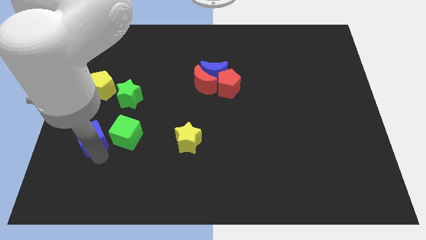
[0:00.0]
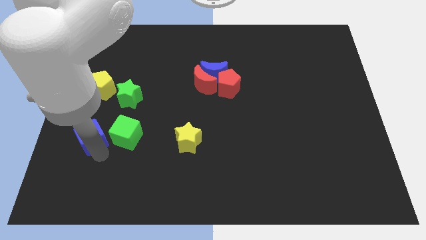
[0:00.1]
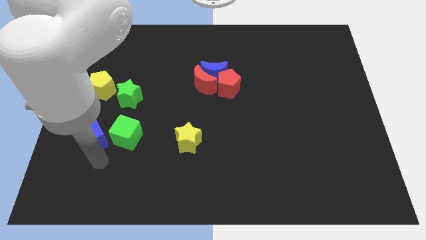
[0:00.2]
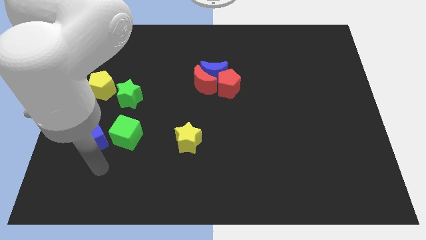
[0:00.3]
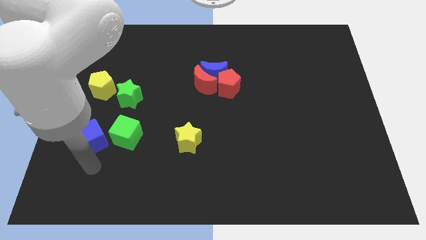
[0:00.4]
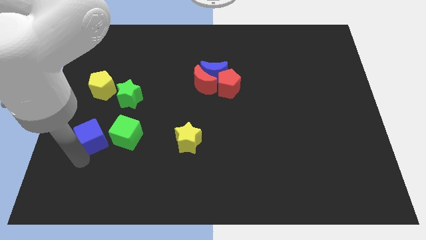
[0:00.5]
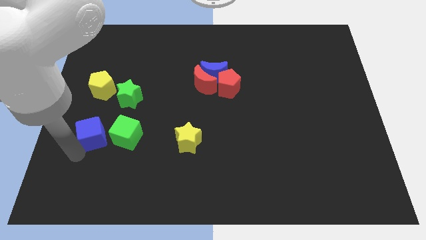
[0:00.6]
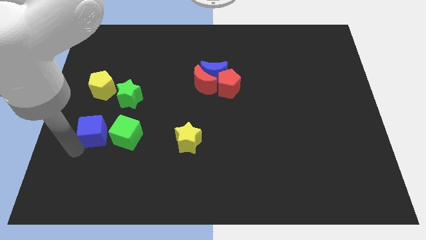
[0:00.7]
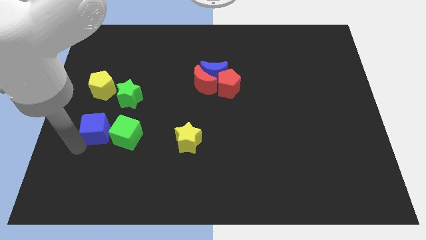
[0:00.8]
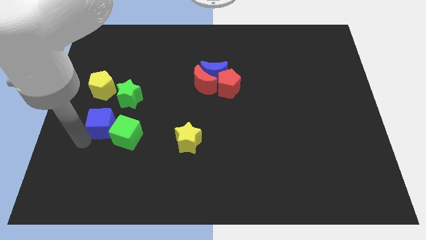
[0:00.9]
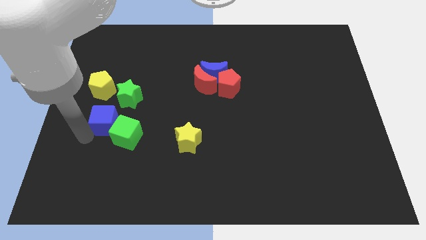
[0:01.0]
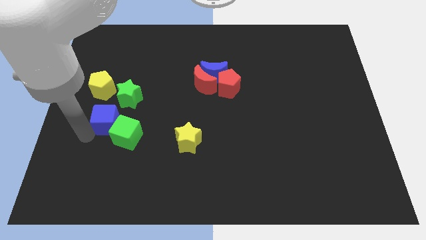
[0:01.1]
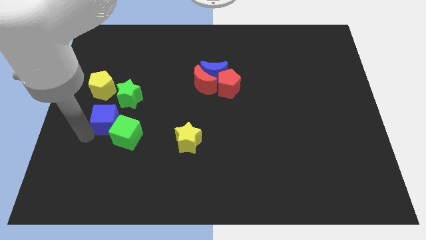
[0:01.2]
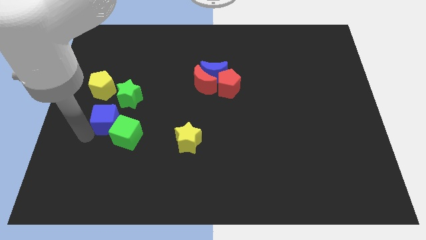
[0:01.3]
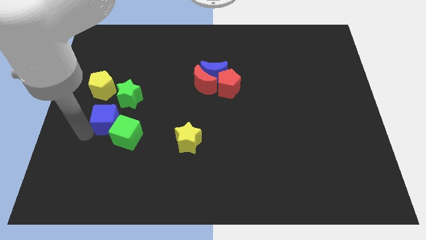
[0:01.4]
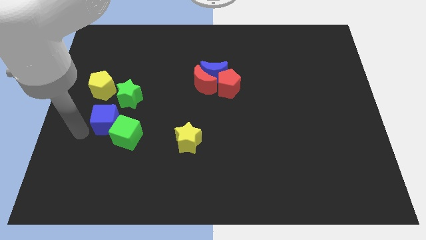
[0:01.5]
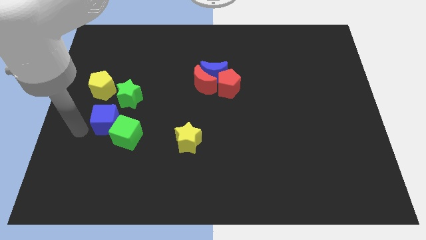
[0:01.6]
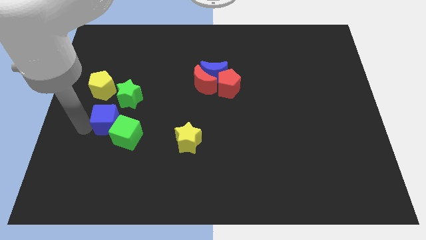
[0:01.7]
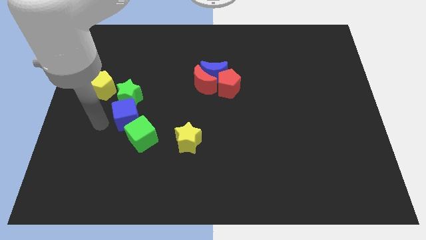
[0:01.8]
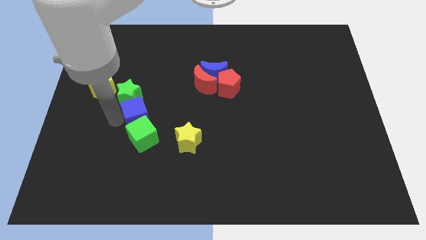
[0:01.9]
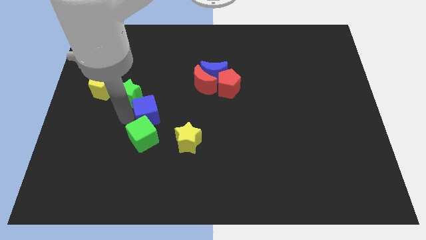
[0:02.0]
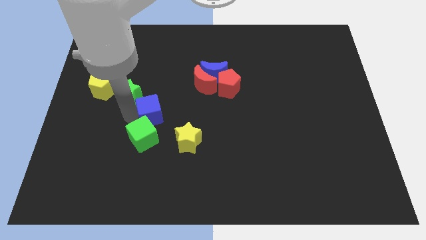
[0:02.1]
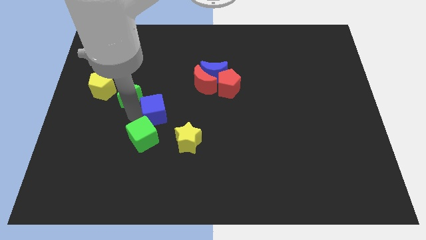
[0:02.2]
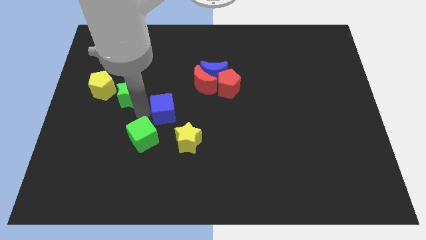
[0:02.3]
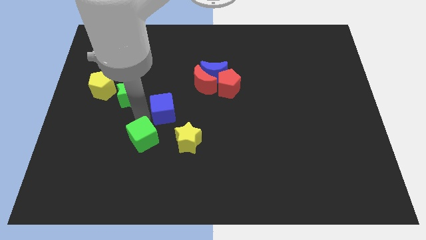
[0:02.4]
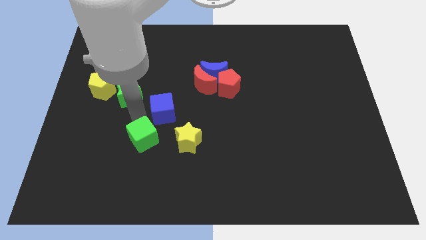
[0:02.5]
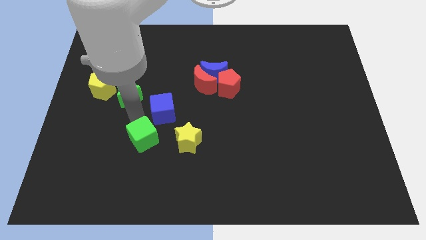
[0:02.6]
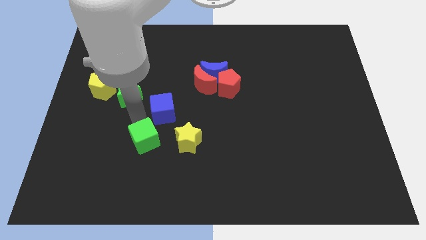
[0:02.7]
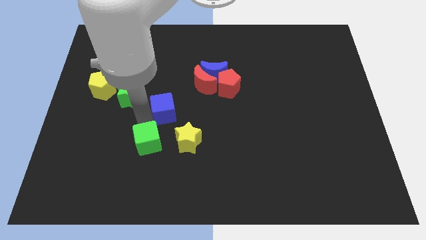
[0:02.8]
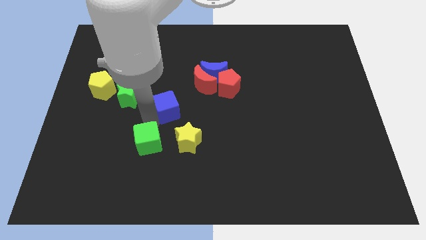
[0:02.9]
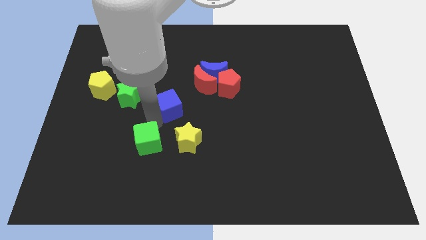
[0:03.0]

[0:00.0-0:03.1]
move the lblue cube to the top right of the green cube

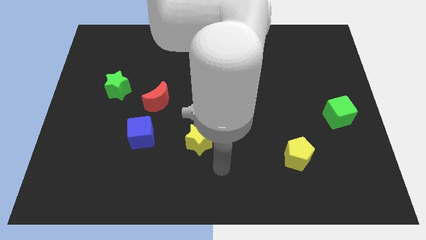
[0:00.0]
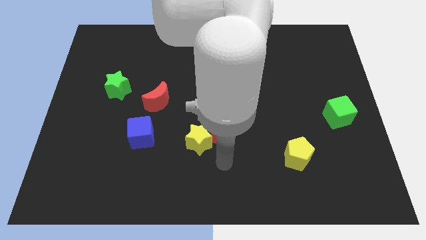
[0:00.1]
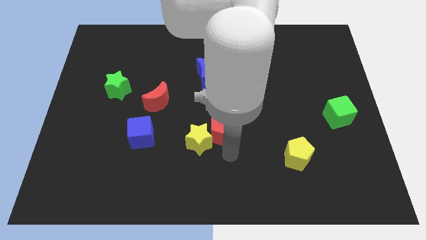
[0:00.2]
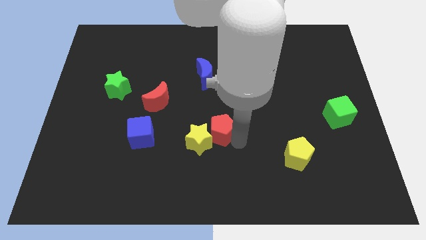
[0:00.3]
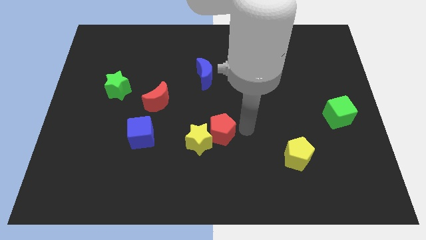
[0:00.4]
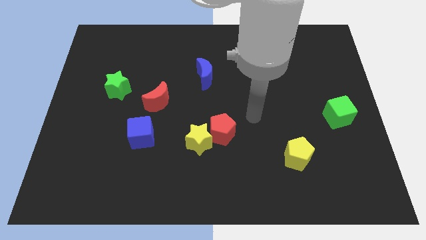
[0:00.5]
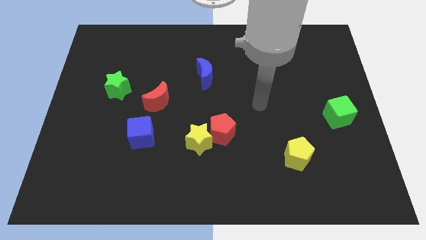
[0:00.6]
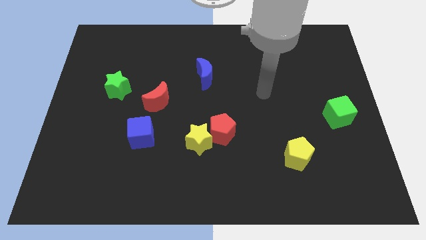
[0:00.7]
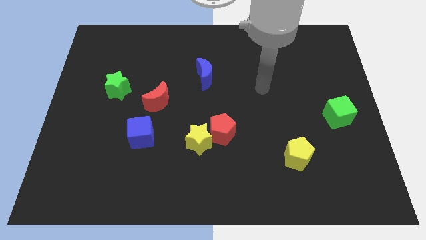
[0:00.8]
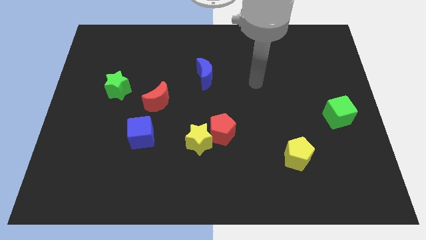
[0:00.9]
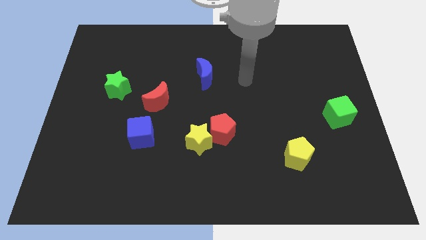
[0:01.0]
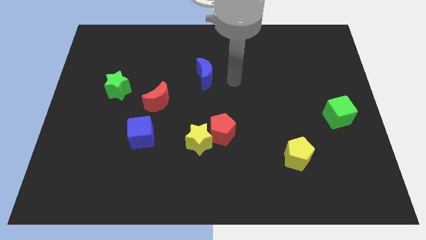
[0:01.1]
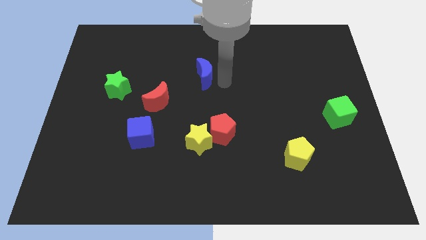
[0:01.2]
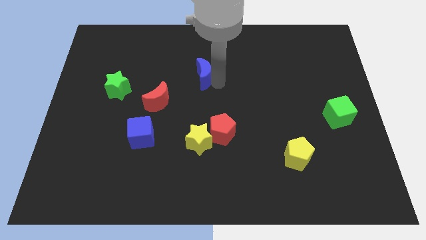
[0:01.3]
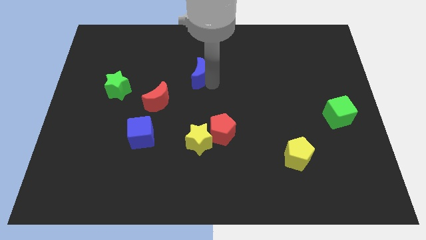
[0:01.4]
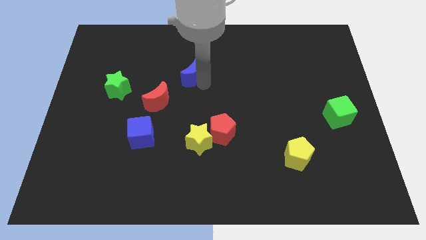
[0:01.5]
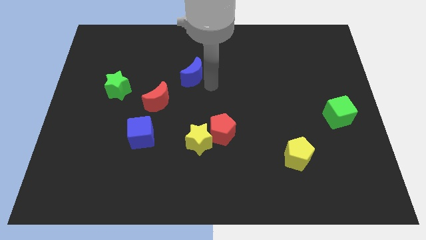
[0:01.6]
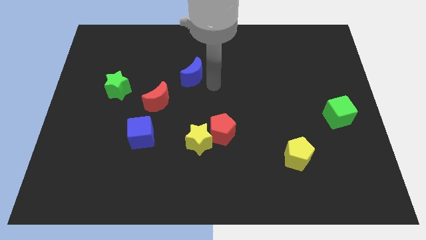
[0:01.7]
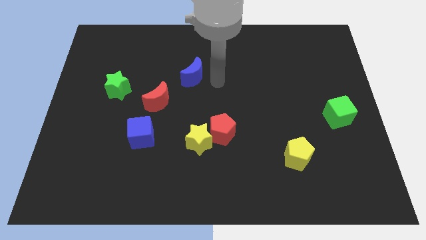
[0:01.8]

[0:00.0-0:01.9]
push the half blue moon slightly to the left side of the board

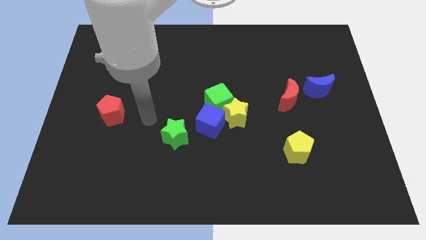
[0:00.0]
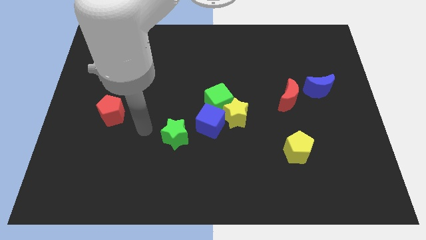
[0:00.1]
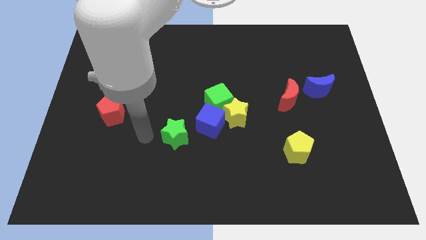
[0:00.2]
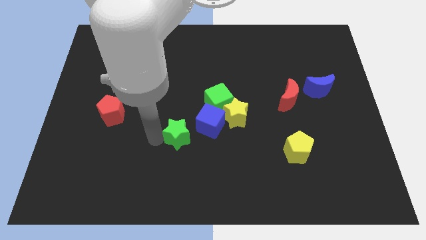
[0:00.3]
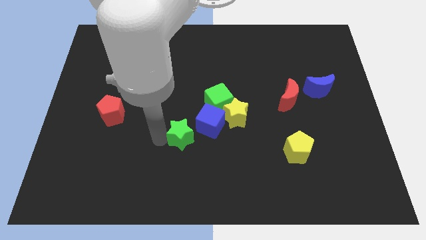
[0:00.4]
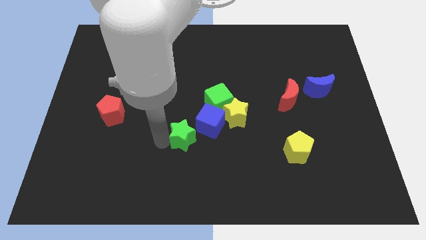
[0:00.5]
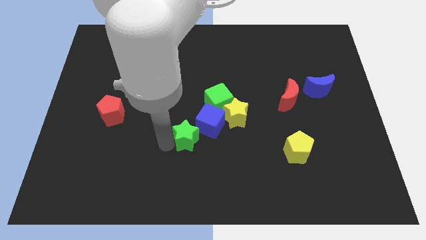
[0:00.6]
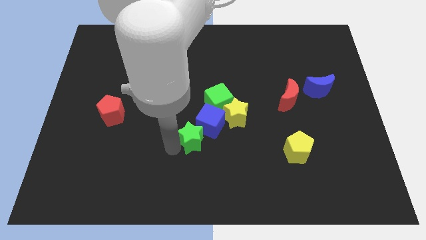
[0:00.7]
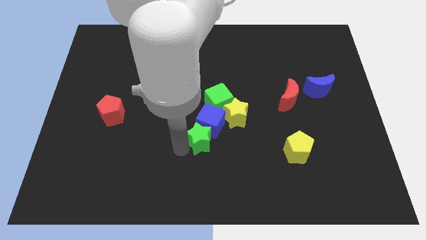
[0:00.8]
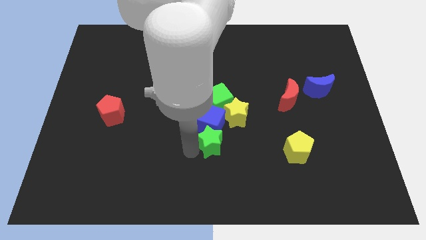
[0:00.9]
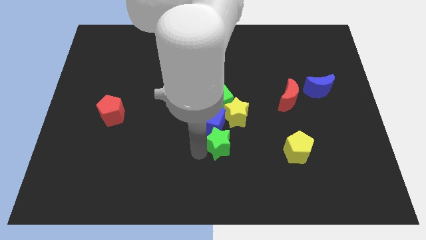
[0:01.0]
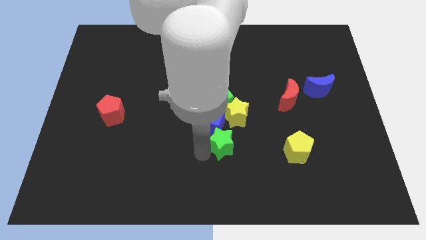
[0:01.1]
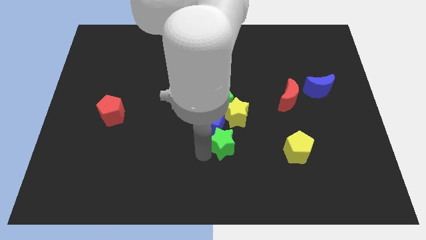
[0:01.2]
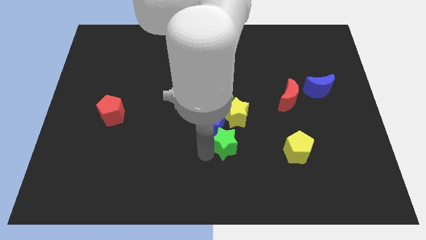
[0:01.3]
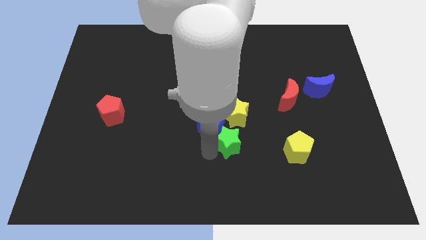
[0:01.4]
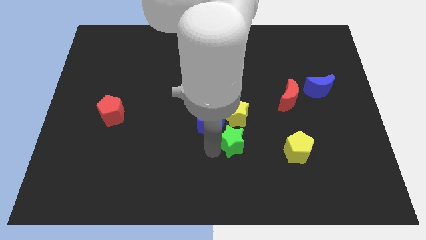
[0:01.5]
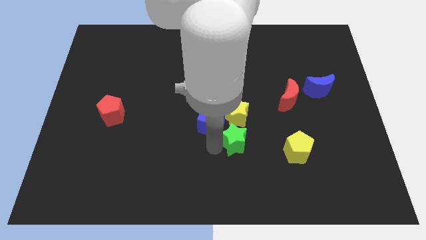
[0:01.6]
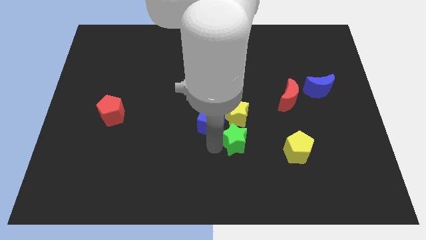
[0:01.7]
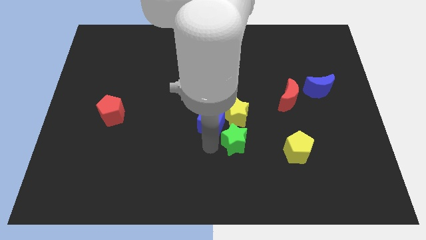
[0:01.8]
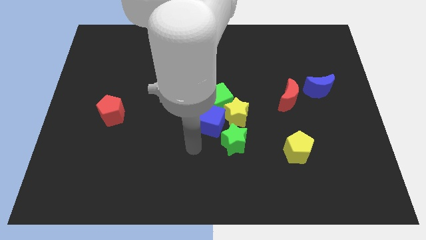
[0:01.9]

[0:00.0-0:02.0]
place green star to the bottom side of the yellow star

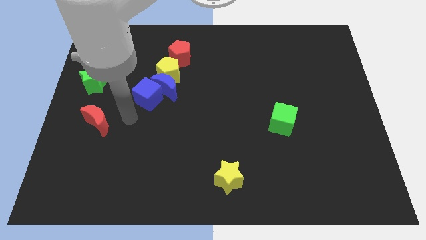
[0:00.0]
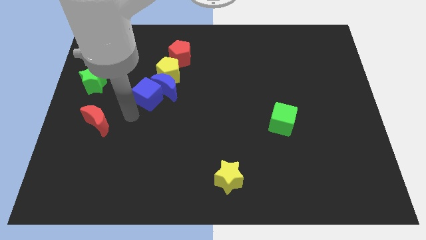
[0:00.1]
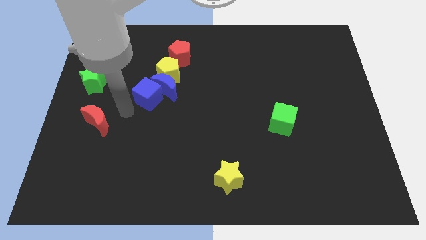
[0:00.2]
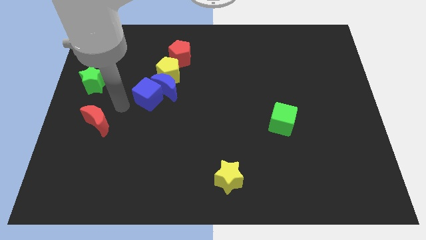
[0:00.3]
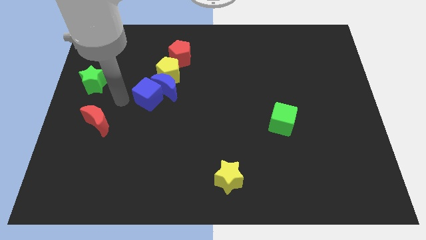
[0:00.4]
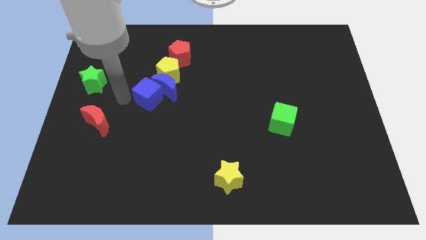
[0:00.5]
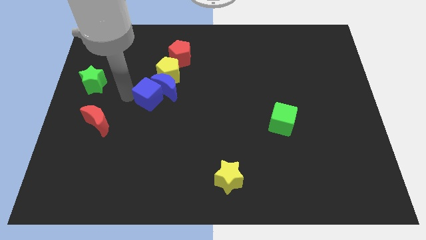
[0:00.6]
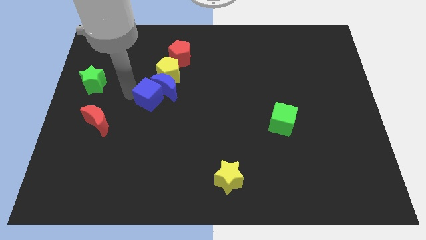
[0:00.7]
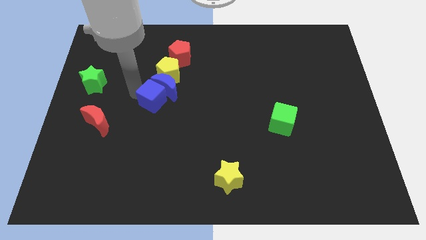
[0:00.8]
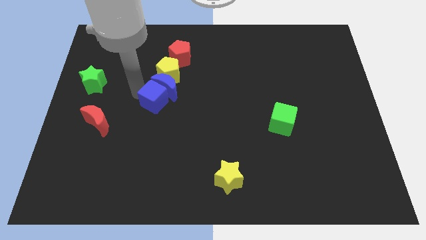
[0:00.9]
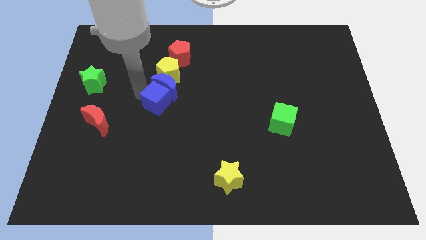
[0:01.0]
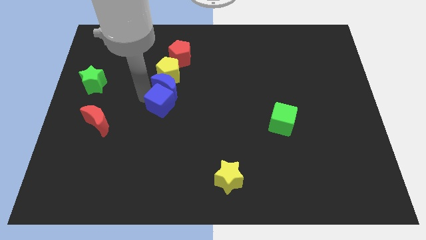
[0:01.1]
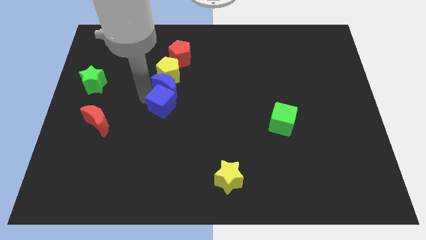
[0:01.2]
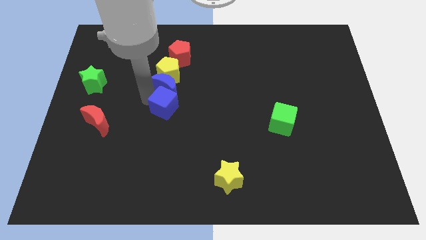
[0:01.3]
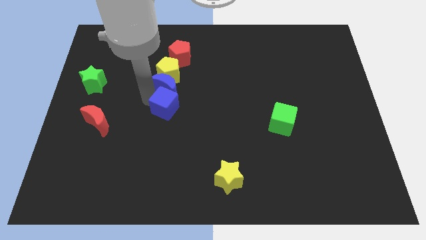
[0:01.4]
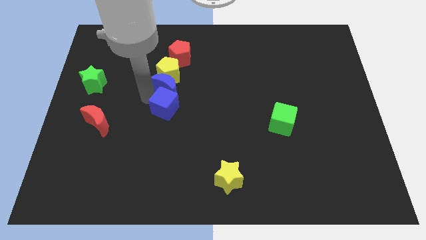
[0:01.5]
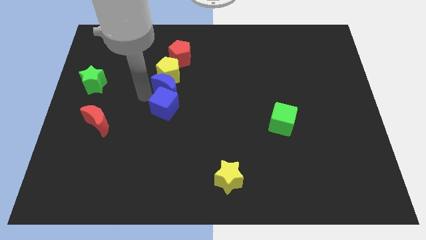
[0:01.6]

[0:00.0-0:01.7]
move the blue cube to the bottom of the blue crescent

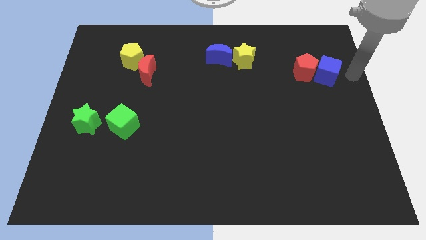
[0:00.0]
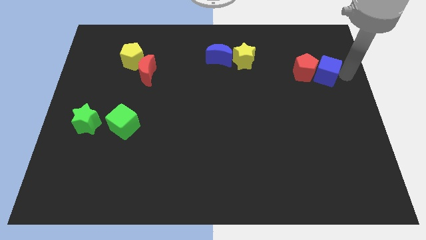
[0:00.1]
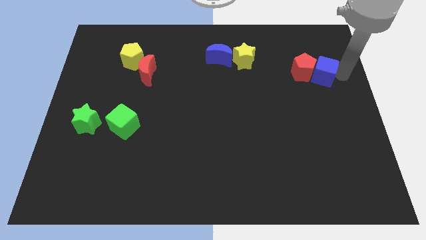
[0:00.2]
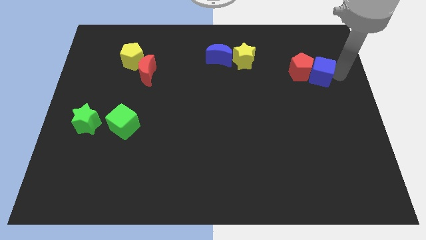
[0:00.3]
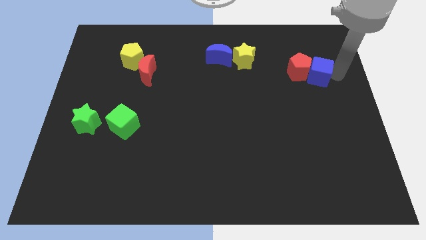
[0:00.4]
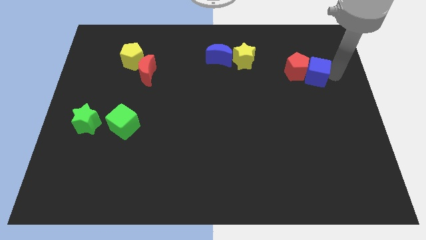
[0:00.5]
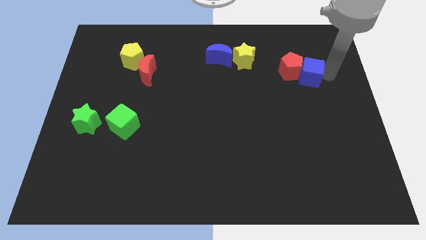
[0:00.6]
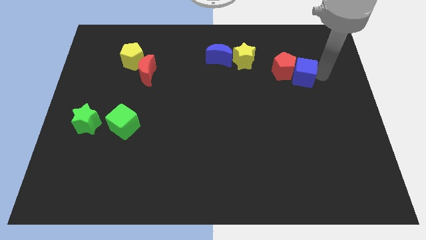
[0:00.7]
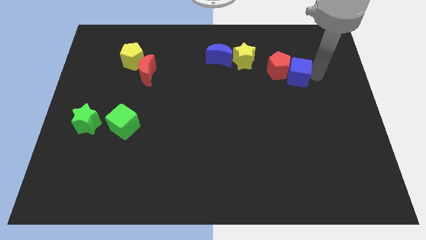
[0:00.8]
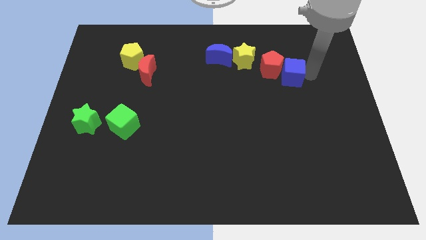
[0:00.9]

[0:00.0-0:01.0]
push the blue cube into the red pentagon
